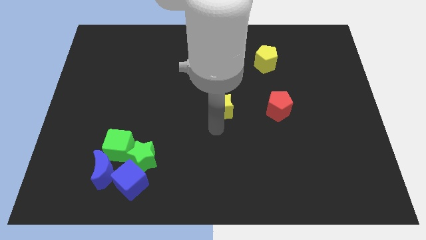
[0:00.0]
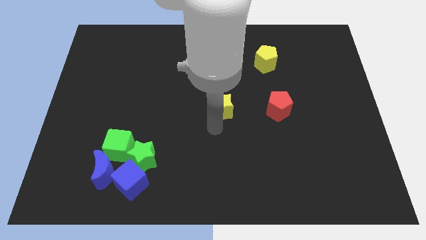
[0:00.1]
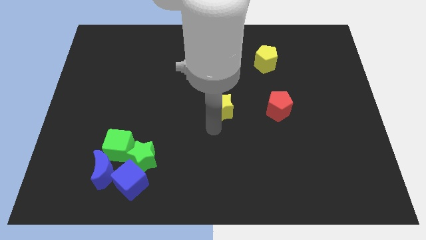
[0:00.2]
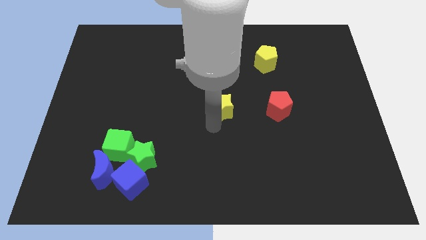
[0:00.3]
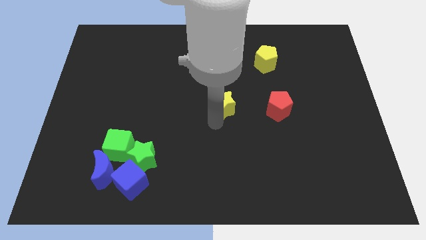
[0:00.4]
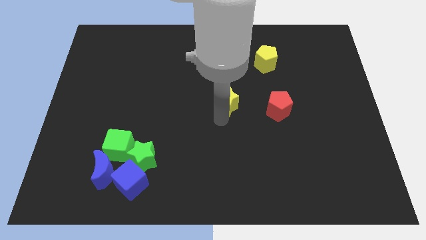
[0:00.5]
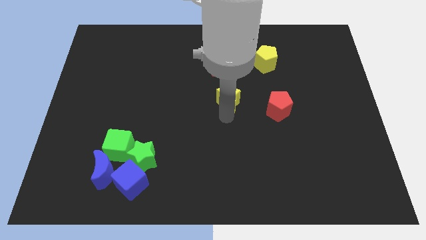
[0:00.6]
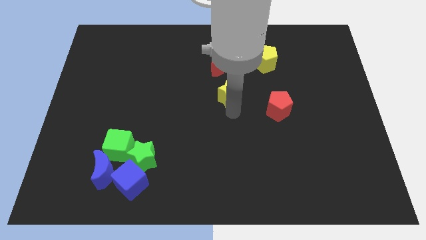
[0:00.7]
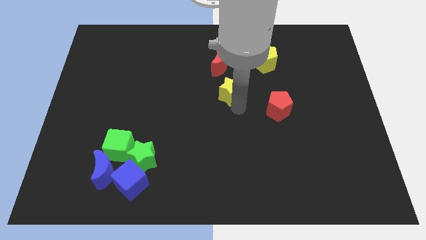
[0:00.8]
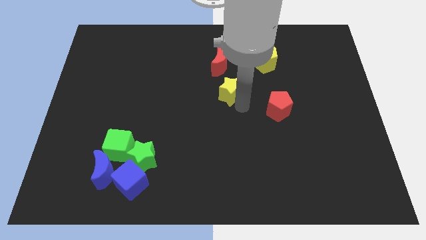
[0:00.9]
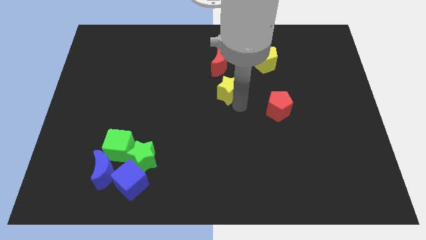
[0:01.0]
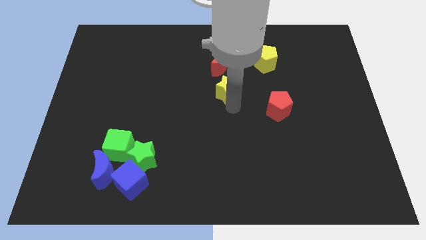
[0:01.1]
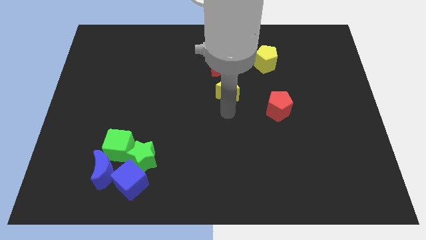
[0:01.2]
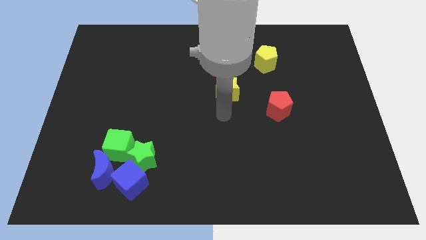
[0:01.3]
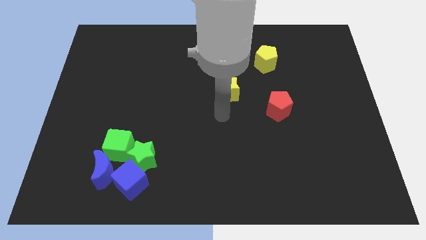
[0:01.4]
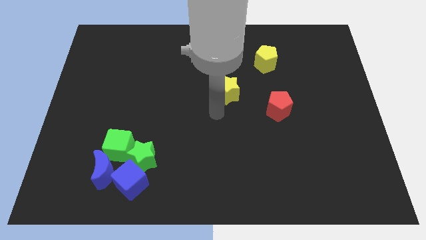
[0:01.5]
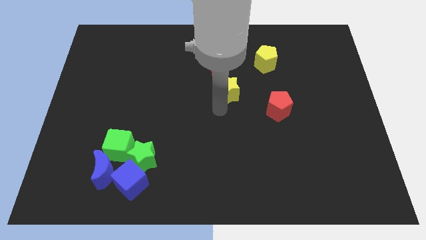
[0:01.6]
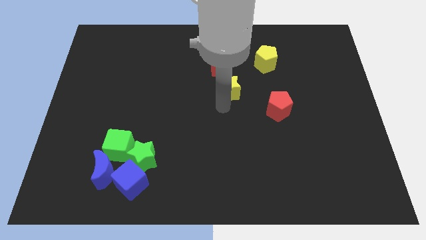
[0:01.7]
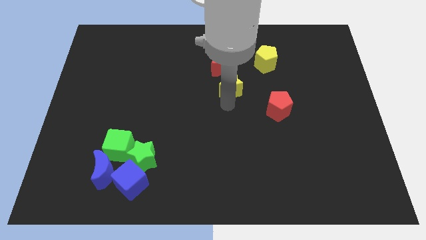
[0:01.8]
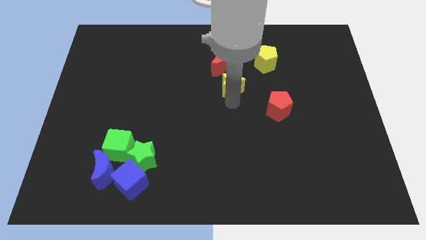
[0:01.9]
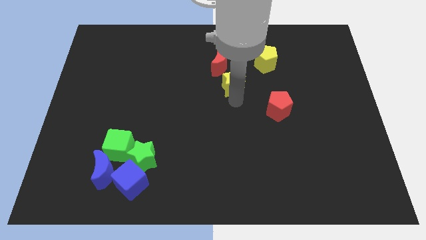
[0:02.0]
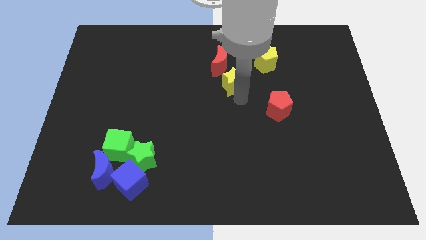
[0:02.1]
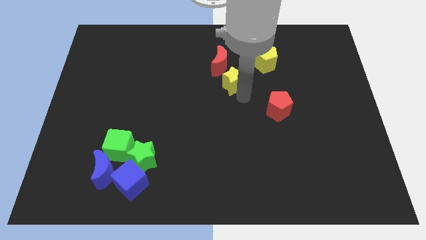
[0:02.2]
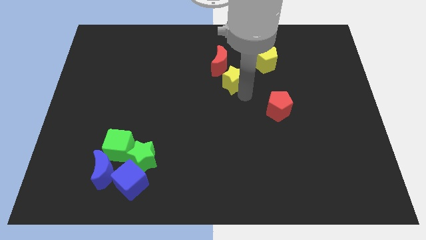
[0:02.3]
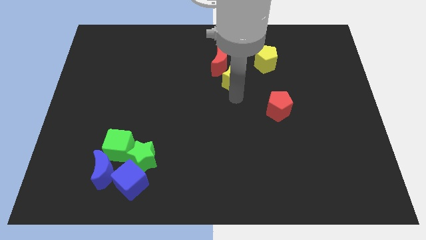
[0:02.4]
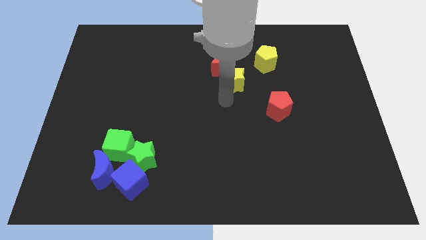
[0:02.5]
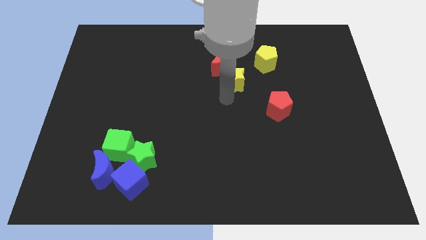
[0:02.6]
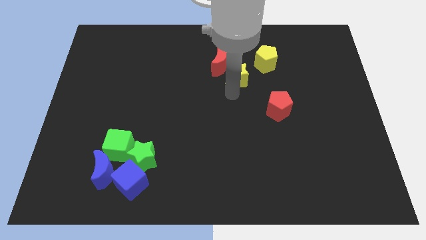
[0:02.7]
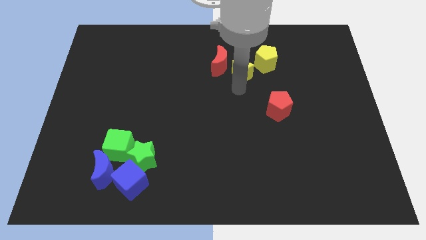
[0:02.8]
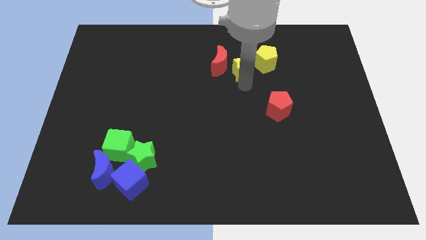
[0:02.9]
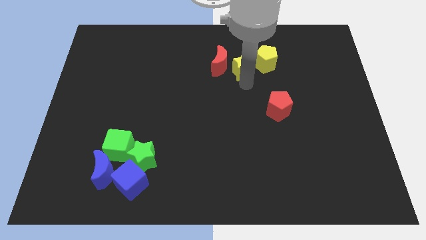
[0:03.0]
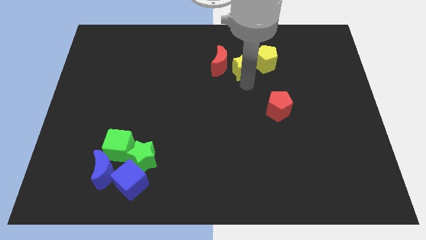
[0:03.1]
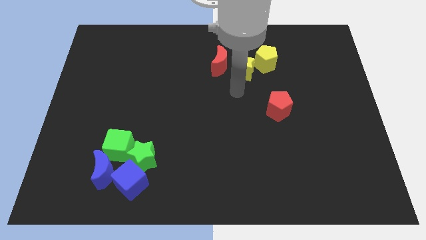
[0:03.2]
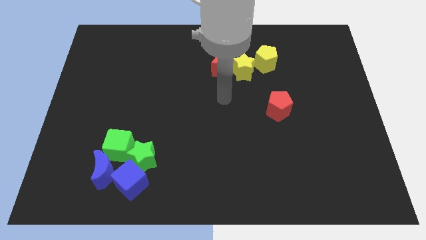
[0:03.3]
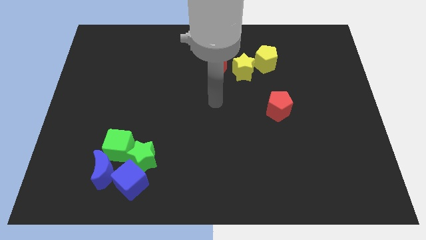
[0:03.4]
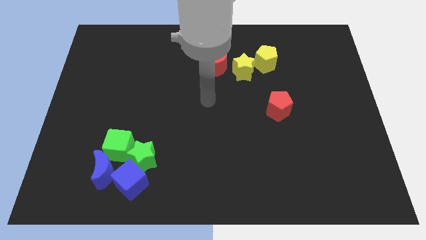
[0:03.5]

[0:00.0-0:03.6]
place yellow star between yellow pentagon and red crescent

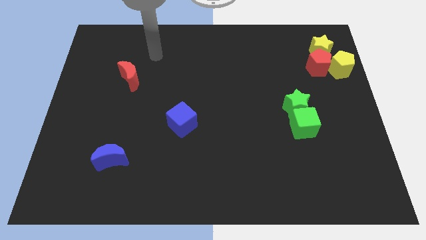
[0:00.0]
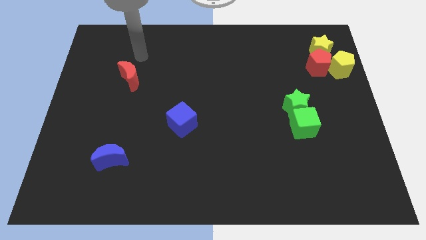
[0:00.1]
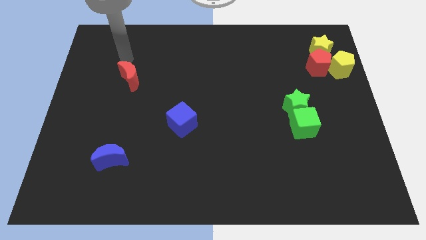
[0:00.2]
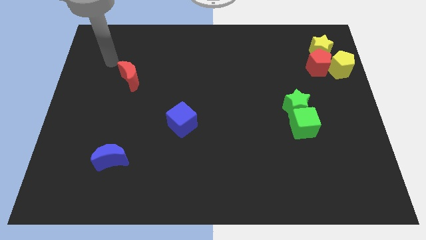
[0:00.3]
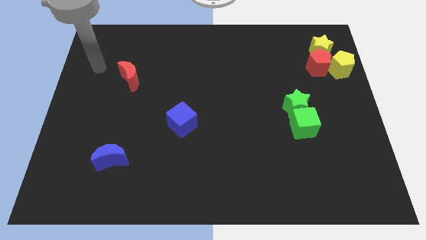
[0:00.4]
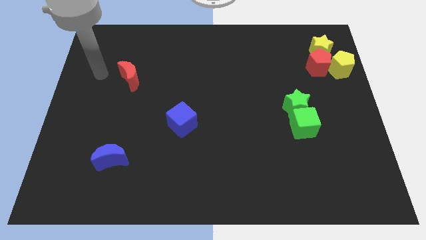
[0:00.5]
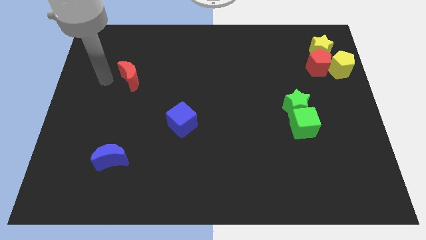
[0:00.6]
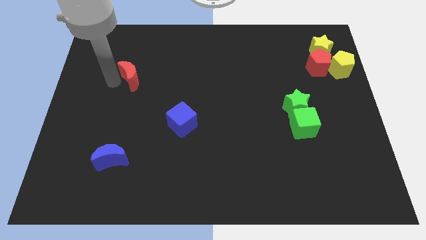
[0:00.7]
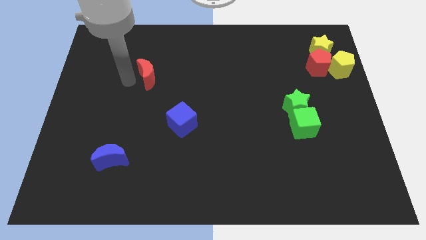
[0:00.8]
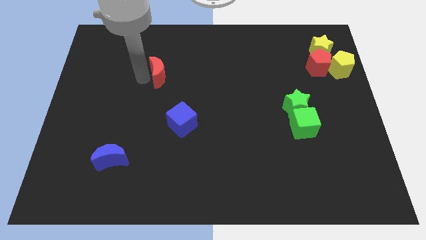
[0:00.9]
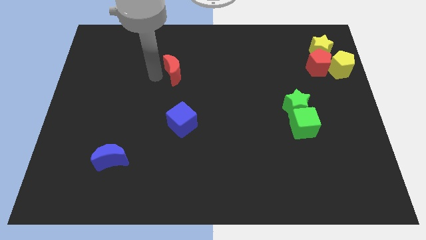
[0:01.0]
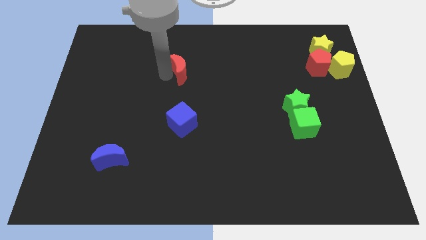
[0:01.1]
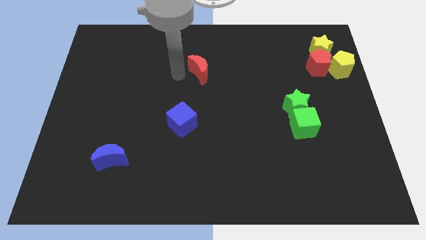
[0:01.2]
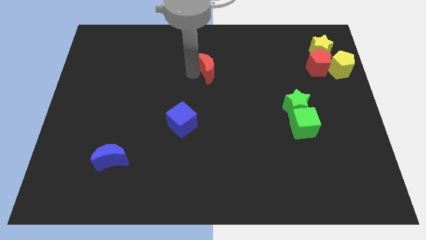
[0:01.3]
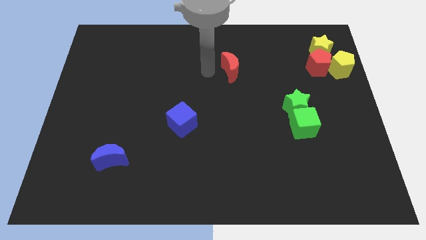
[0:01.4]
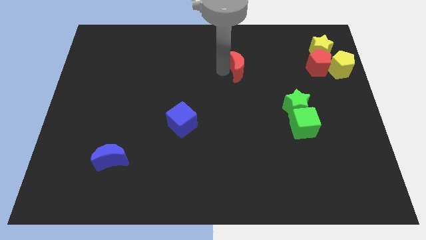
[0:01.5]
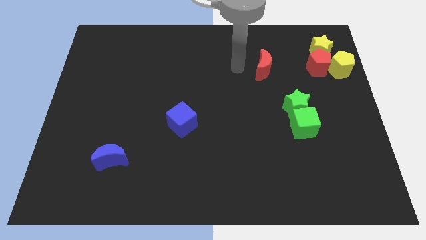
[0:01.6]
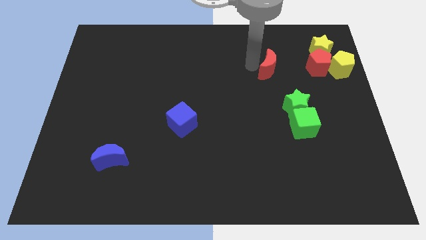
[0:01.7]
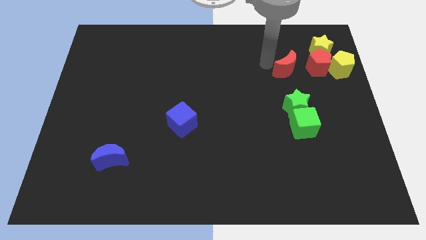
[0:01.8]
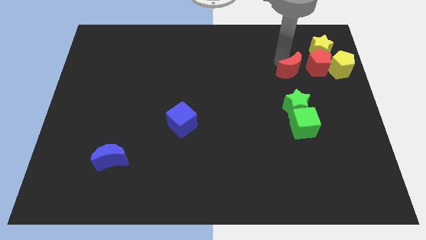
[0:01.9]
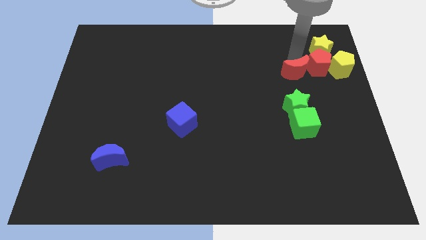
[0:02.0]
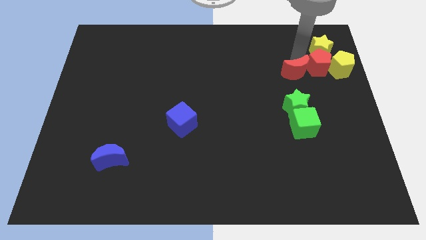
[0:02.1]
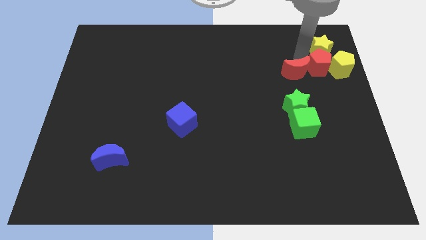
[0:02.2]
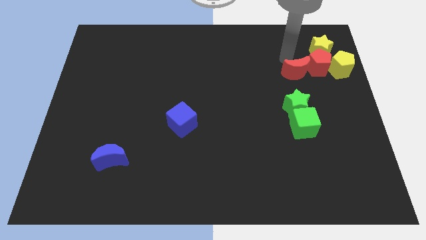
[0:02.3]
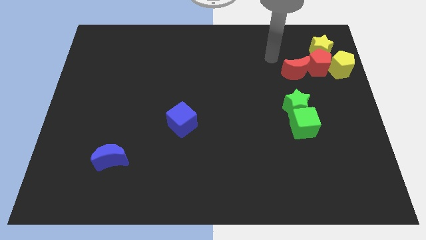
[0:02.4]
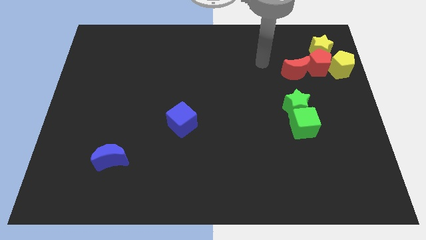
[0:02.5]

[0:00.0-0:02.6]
place the red moon to the left of the red pentagon

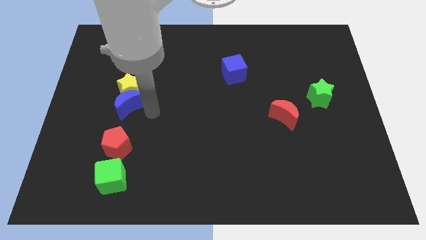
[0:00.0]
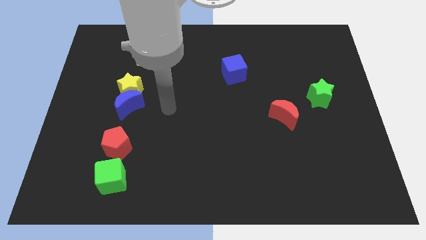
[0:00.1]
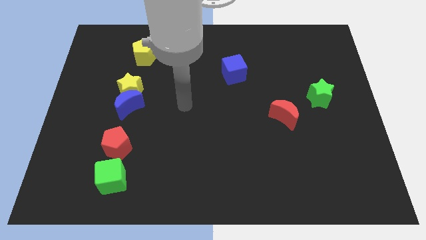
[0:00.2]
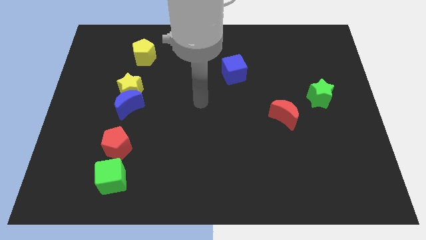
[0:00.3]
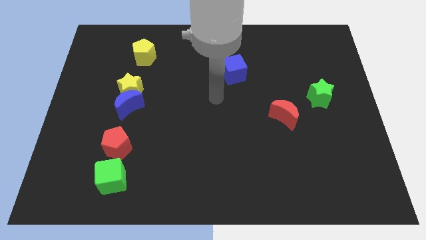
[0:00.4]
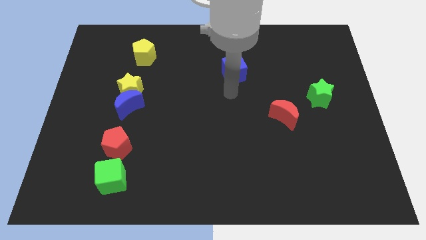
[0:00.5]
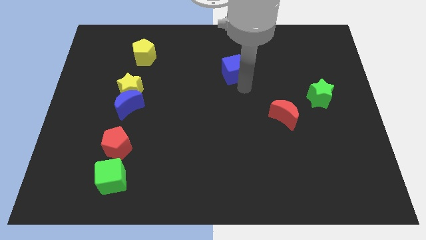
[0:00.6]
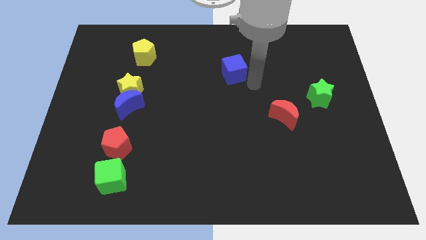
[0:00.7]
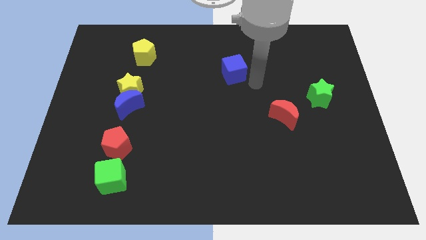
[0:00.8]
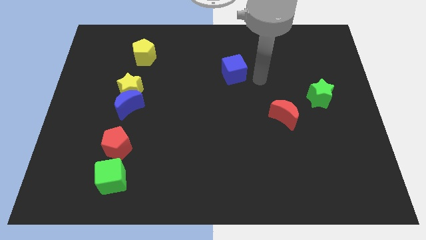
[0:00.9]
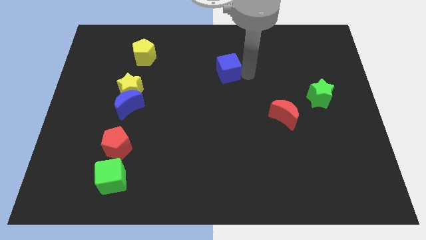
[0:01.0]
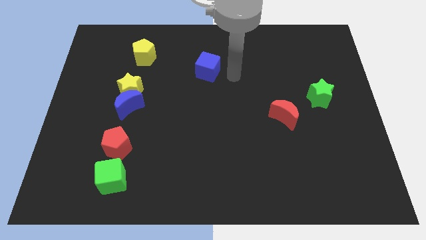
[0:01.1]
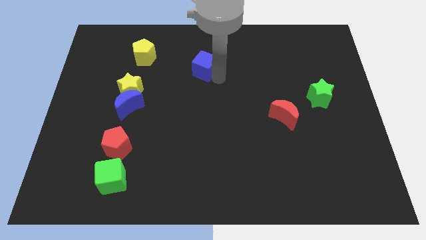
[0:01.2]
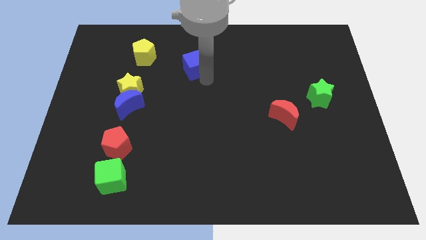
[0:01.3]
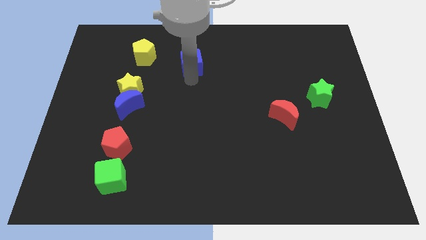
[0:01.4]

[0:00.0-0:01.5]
move the blue cube towards the yellow pentagon

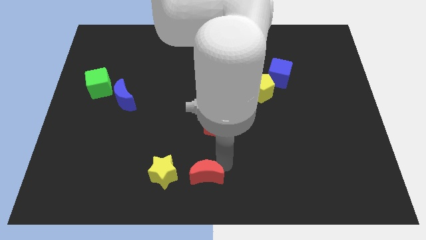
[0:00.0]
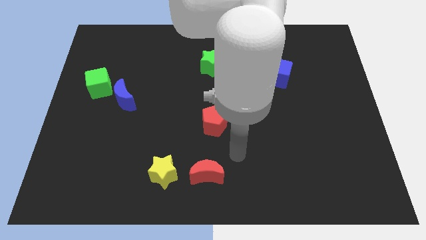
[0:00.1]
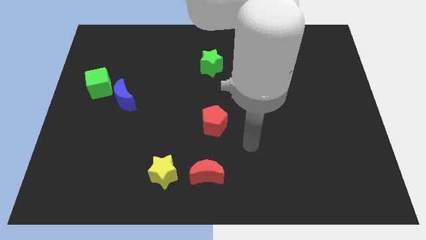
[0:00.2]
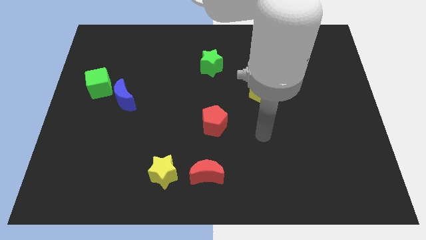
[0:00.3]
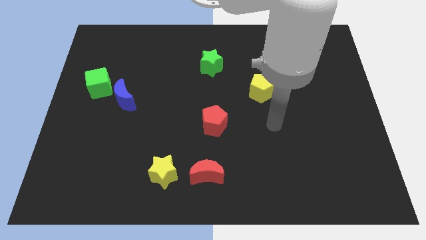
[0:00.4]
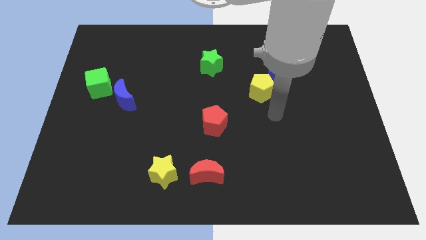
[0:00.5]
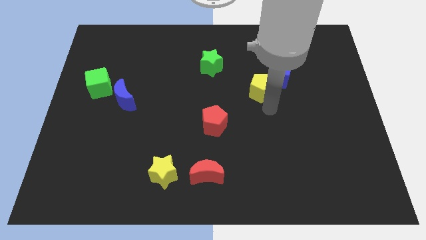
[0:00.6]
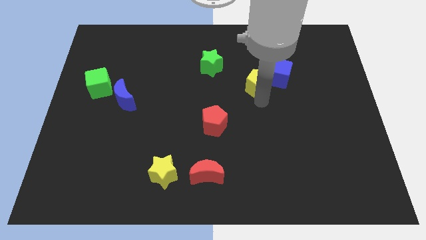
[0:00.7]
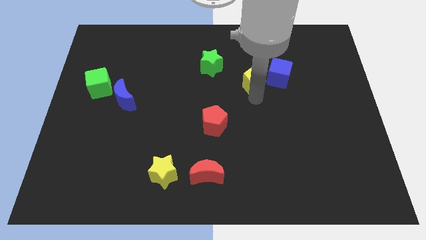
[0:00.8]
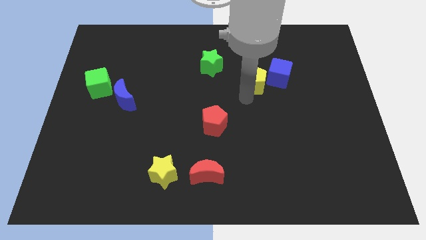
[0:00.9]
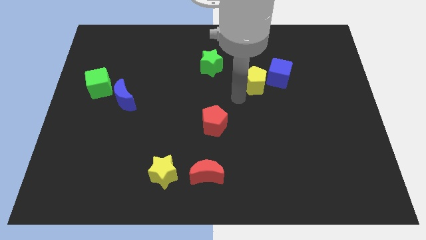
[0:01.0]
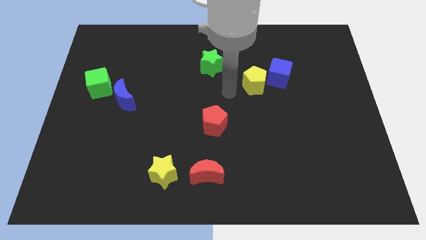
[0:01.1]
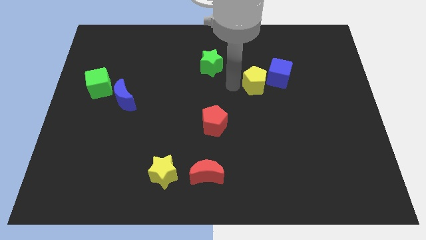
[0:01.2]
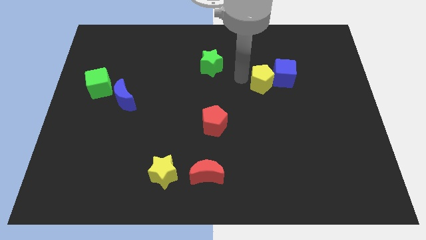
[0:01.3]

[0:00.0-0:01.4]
tap the yellow pentagon
